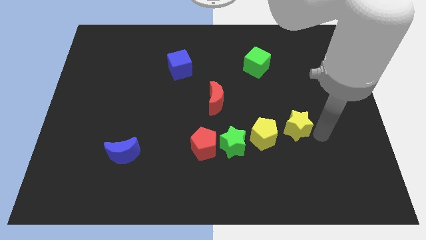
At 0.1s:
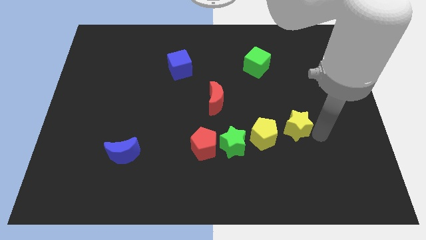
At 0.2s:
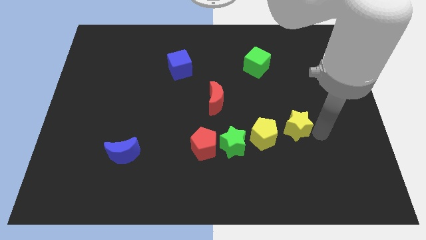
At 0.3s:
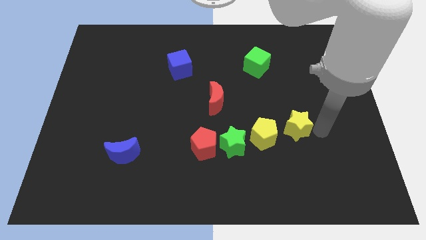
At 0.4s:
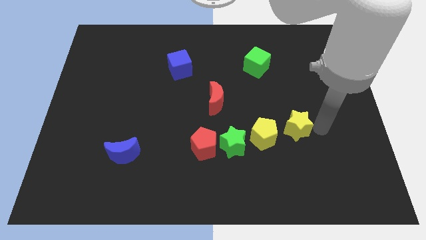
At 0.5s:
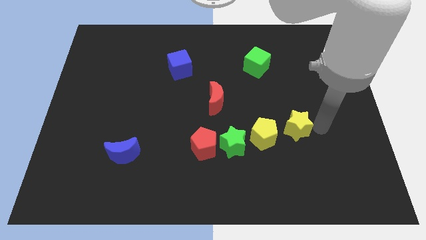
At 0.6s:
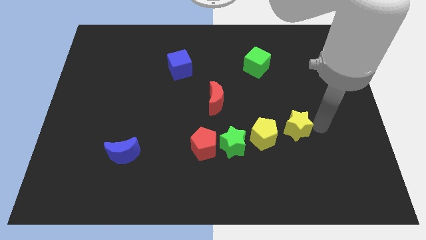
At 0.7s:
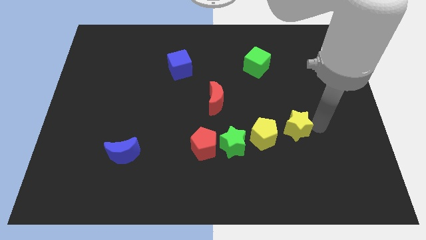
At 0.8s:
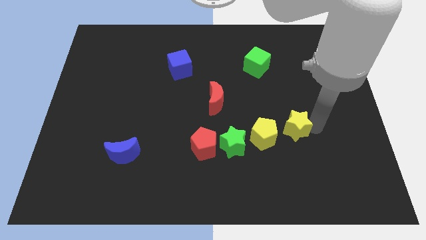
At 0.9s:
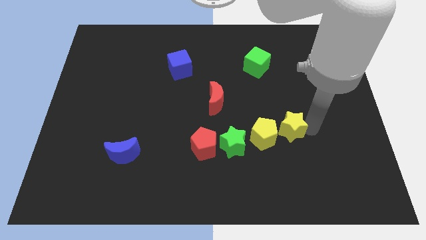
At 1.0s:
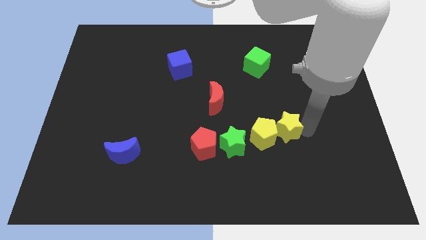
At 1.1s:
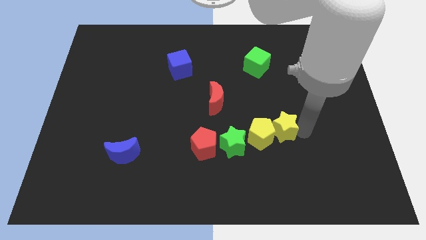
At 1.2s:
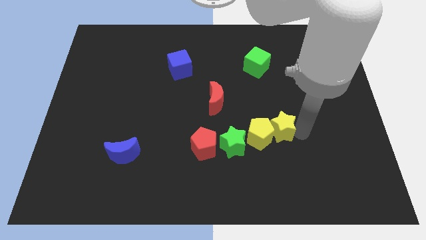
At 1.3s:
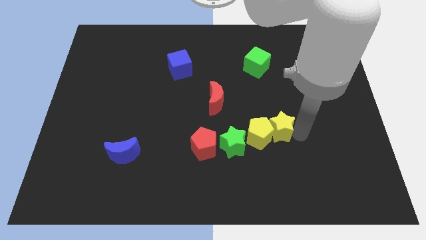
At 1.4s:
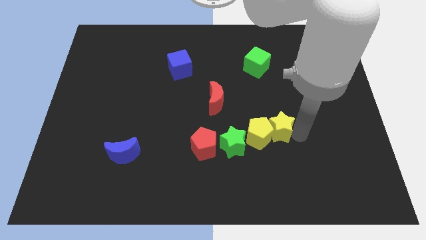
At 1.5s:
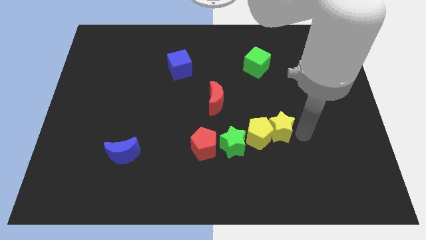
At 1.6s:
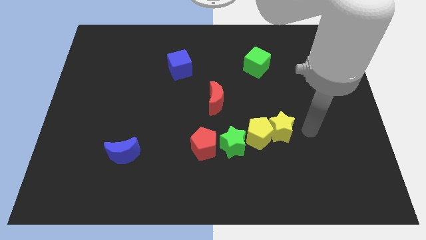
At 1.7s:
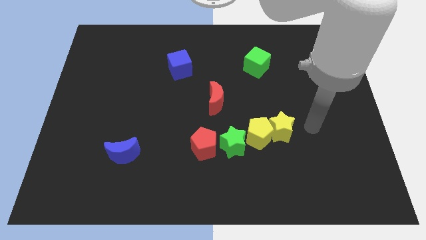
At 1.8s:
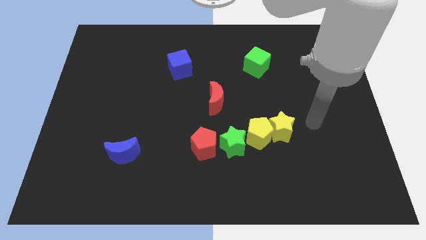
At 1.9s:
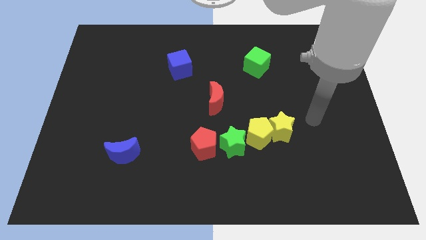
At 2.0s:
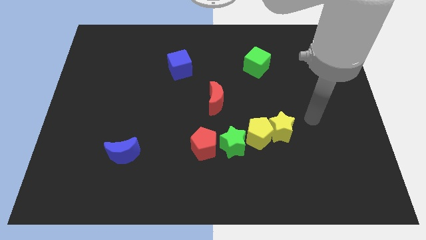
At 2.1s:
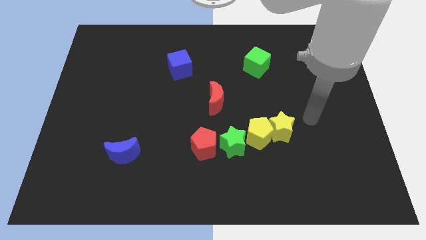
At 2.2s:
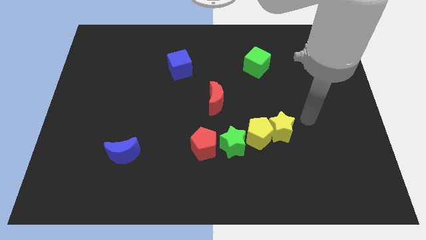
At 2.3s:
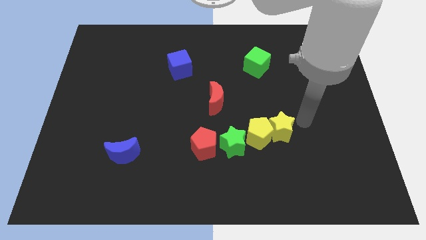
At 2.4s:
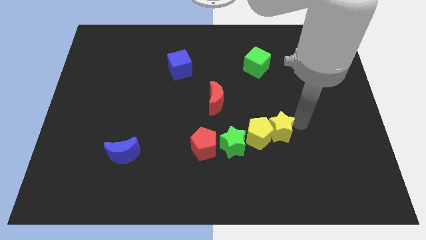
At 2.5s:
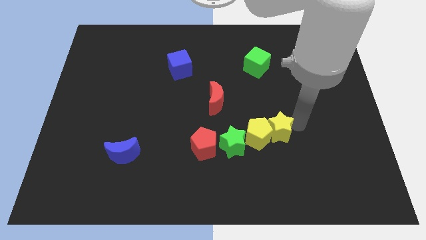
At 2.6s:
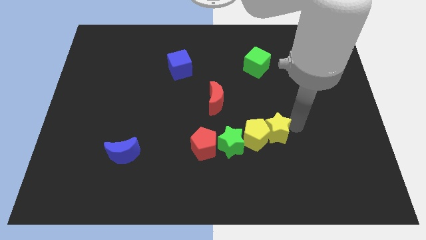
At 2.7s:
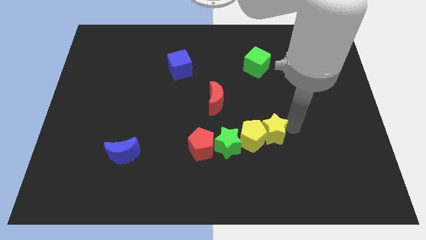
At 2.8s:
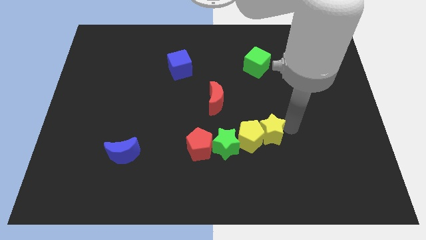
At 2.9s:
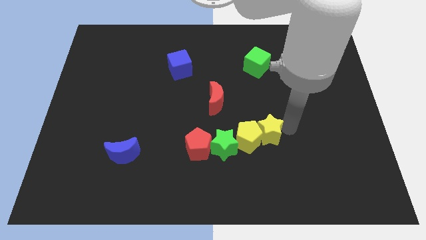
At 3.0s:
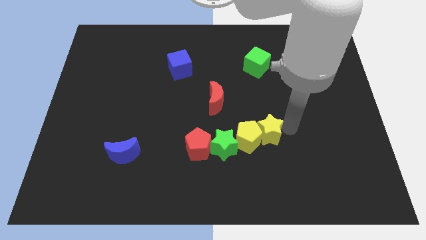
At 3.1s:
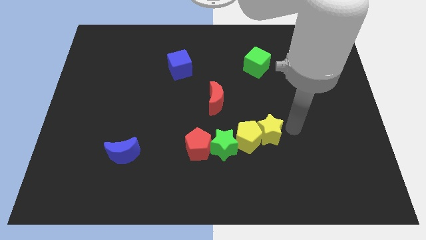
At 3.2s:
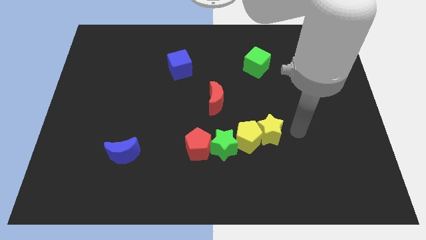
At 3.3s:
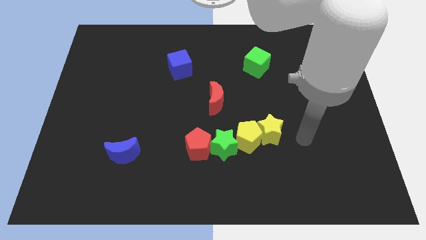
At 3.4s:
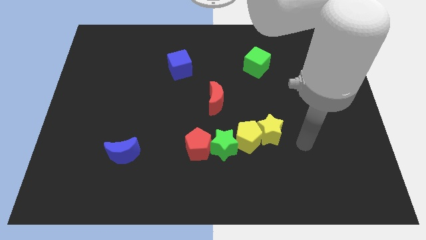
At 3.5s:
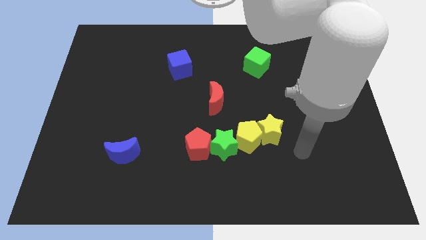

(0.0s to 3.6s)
push yellow star into yellow pentagon

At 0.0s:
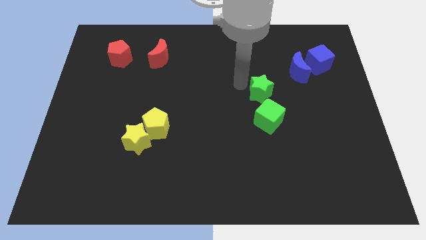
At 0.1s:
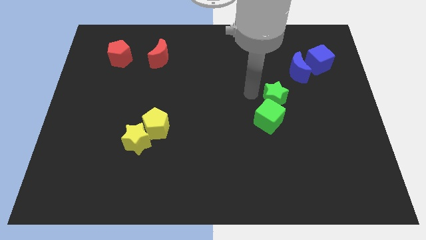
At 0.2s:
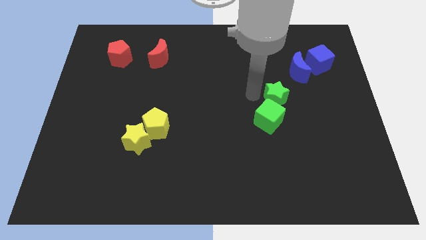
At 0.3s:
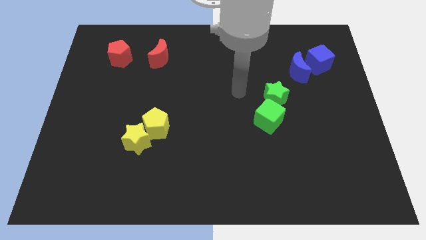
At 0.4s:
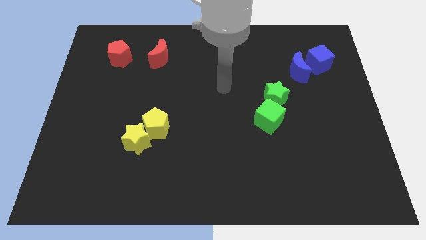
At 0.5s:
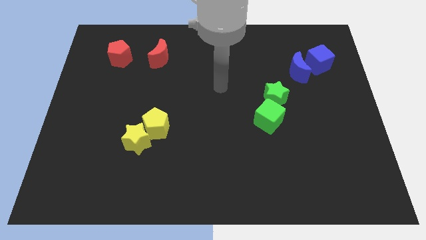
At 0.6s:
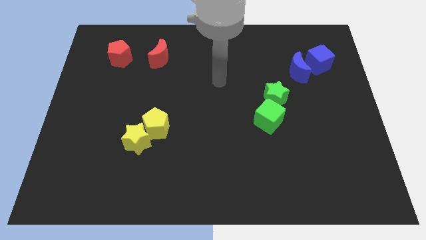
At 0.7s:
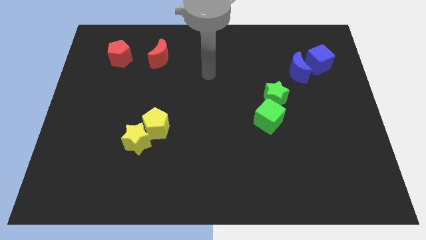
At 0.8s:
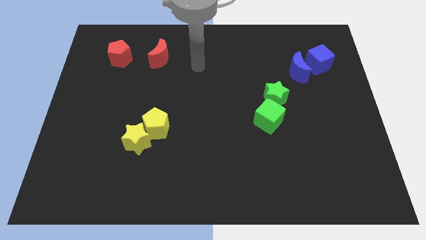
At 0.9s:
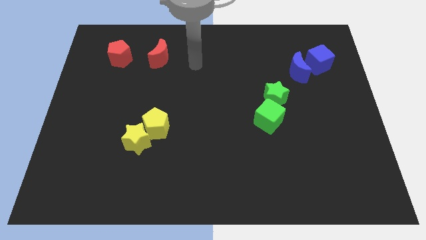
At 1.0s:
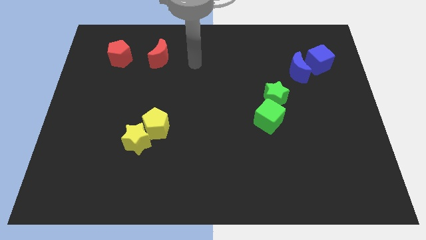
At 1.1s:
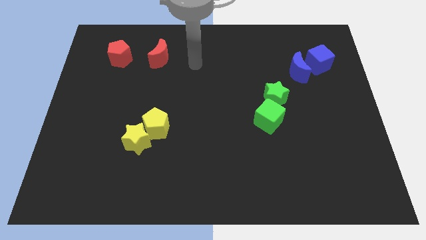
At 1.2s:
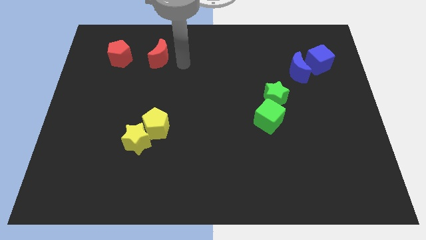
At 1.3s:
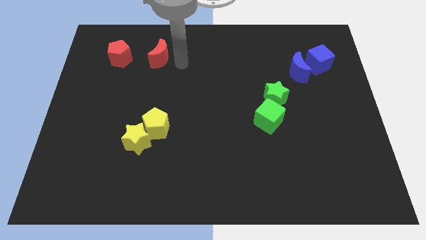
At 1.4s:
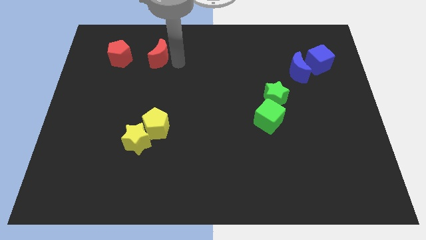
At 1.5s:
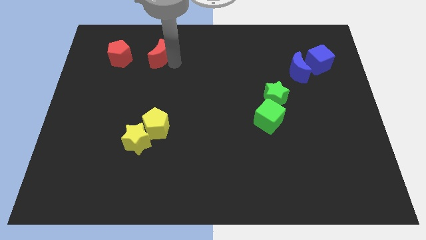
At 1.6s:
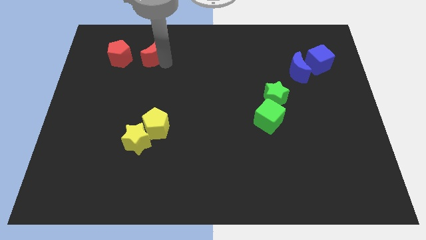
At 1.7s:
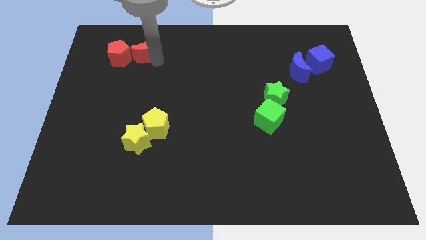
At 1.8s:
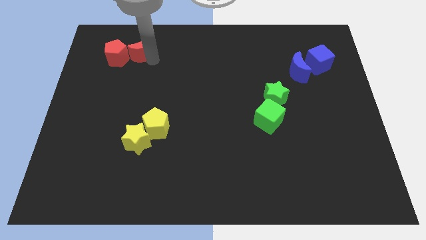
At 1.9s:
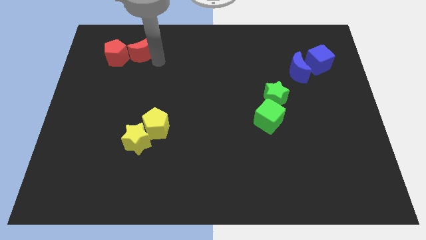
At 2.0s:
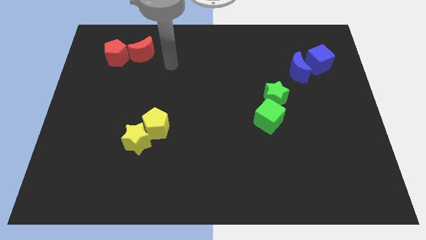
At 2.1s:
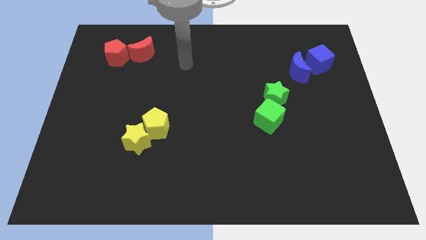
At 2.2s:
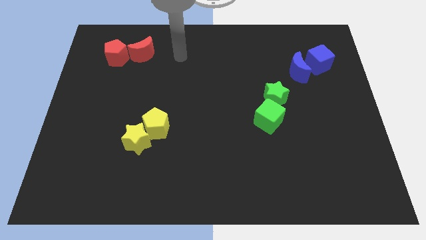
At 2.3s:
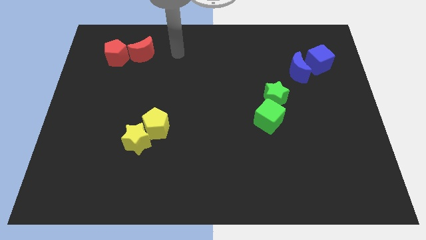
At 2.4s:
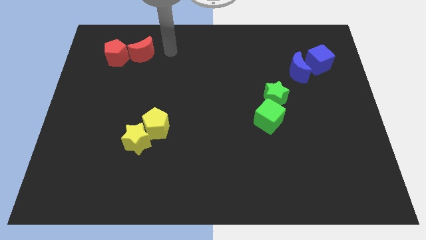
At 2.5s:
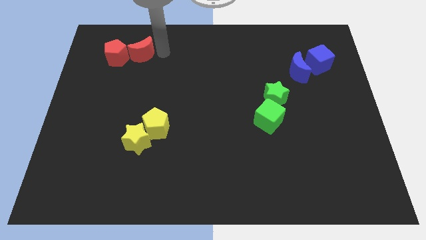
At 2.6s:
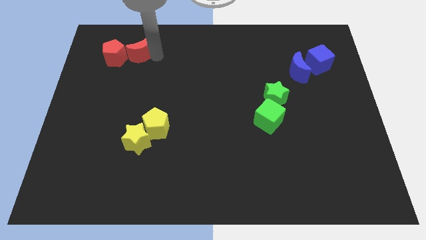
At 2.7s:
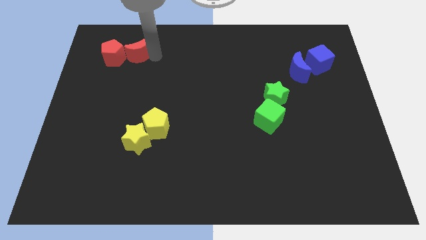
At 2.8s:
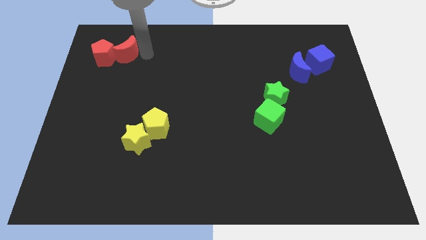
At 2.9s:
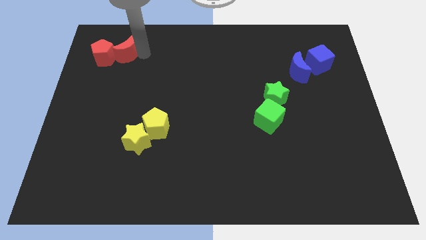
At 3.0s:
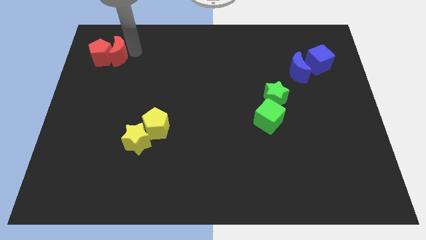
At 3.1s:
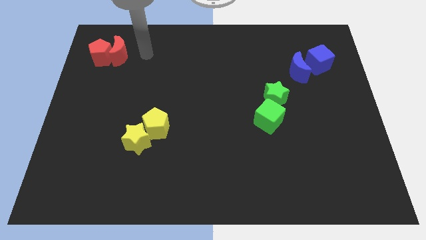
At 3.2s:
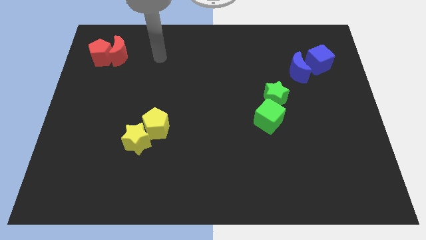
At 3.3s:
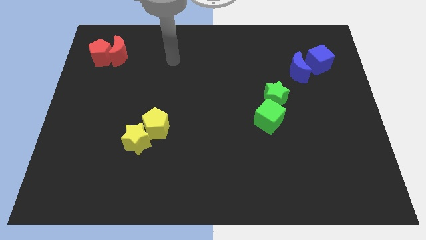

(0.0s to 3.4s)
move the green star slightly to the right side

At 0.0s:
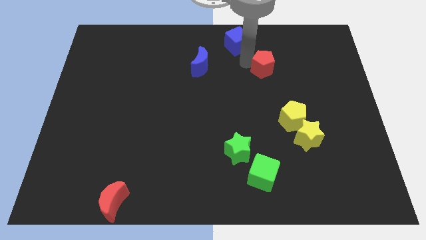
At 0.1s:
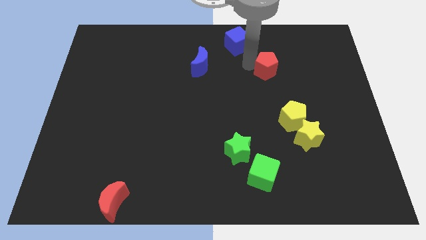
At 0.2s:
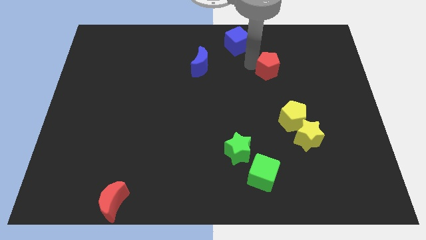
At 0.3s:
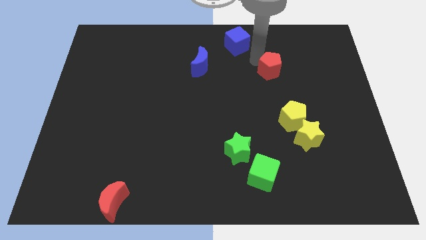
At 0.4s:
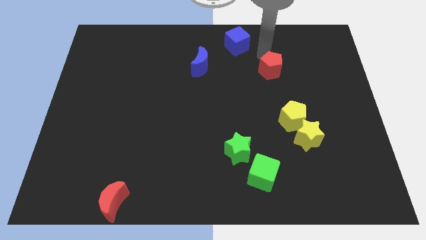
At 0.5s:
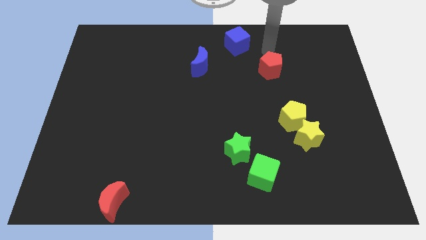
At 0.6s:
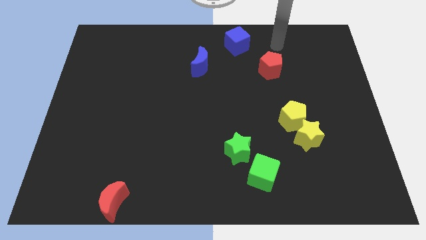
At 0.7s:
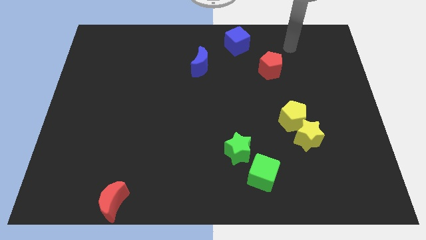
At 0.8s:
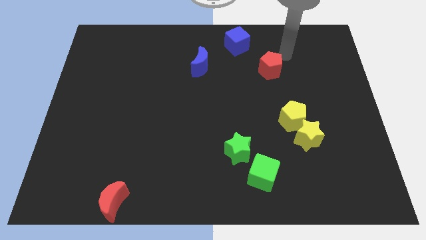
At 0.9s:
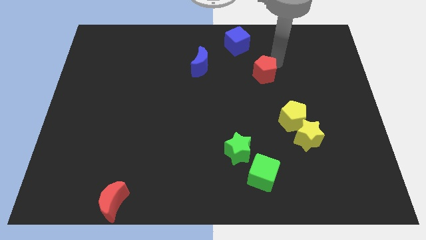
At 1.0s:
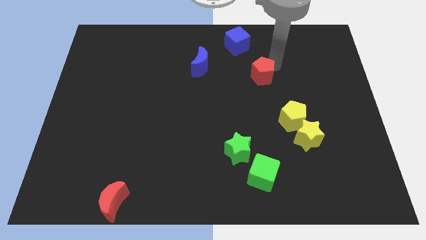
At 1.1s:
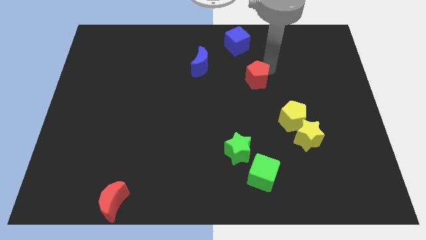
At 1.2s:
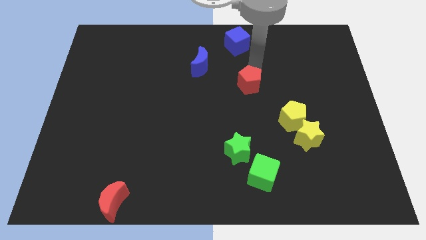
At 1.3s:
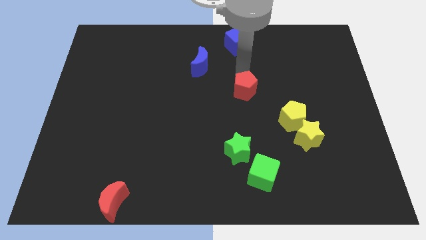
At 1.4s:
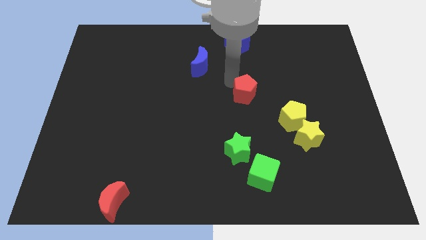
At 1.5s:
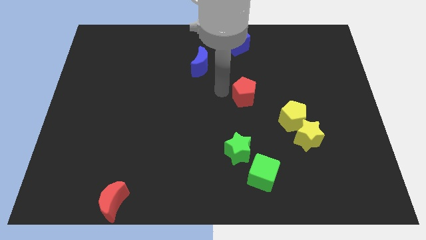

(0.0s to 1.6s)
place the red pentagon above the green star

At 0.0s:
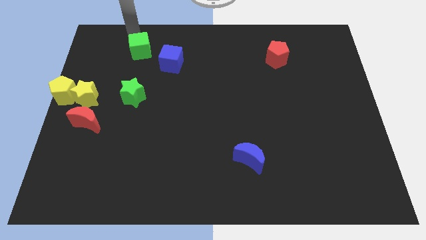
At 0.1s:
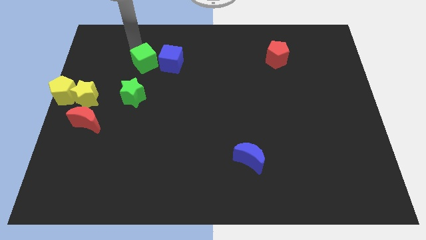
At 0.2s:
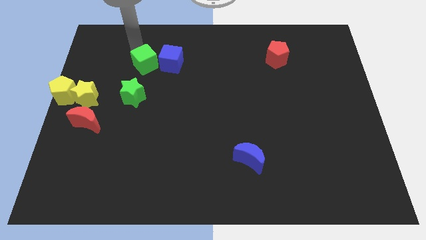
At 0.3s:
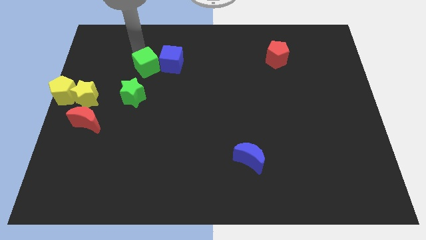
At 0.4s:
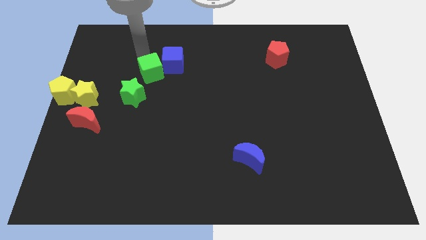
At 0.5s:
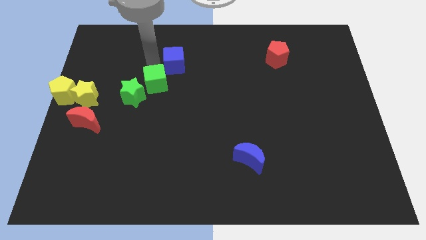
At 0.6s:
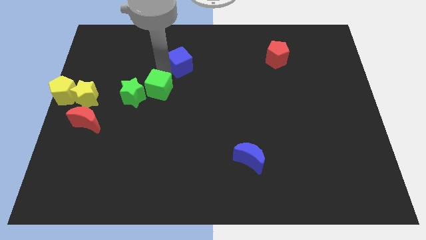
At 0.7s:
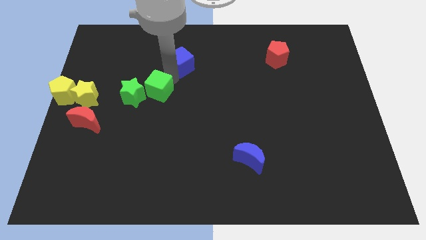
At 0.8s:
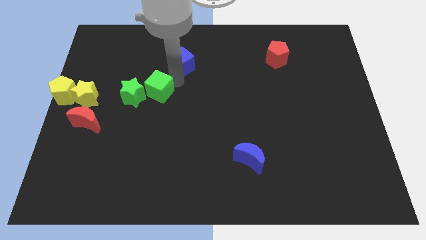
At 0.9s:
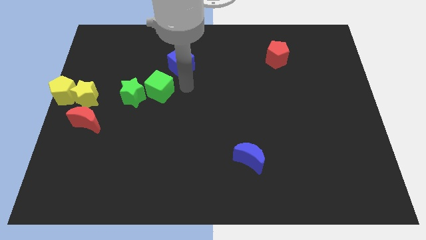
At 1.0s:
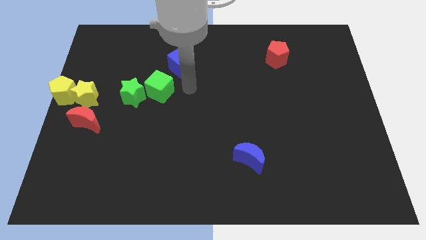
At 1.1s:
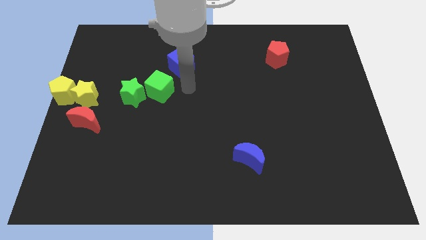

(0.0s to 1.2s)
move the green cube to the right of the green star
